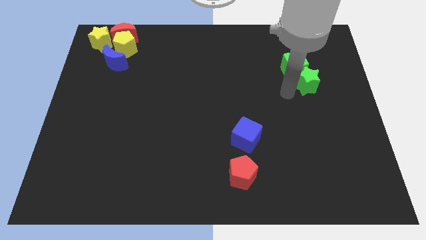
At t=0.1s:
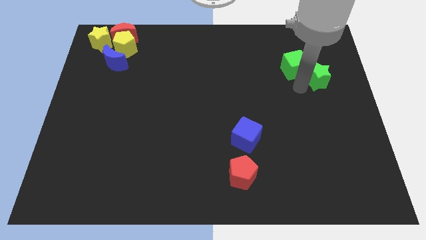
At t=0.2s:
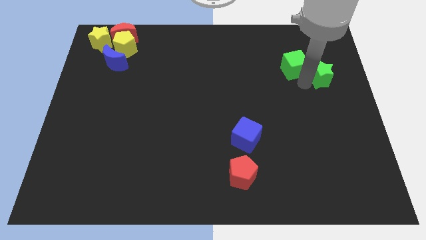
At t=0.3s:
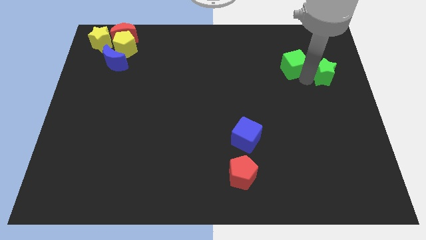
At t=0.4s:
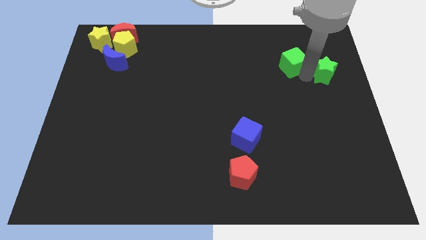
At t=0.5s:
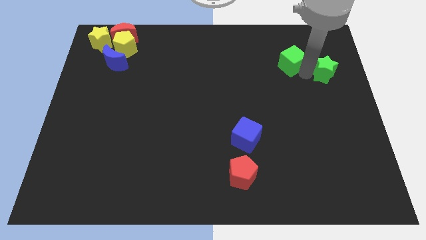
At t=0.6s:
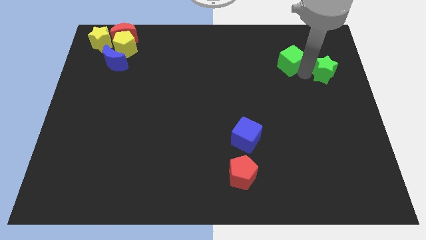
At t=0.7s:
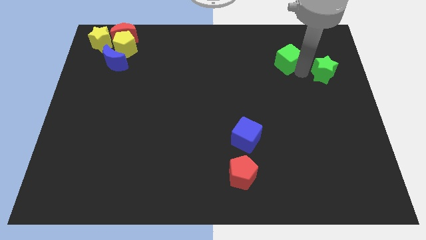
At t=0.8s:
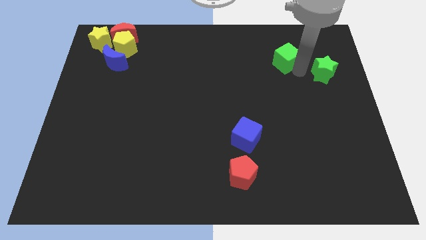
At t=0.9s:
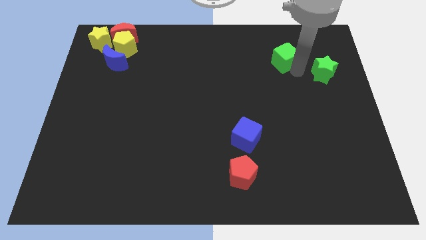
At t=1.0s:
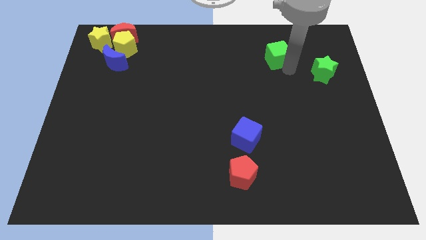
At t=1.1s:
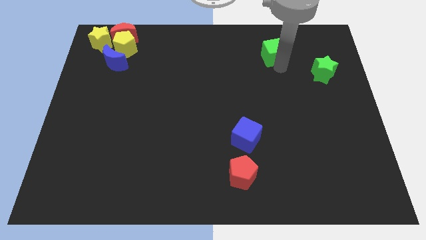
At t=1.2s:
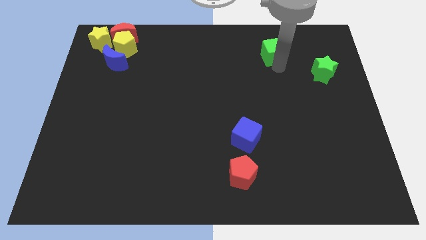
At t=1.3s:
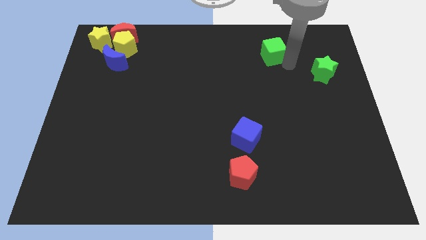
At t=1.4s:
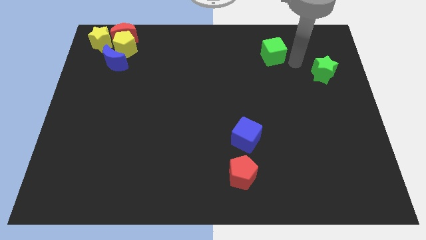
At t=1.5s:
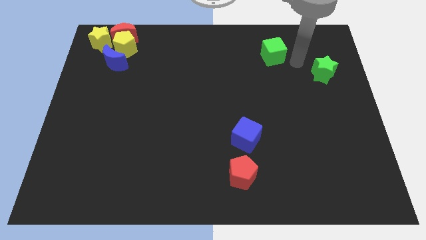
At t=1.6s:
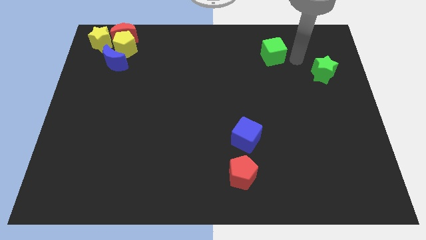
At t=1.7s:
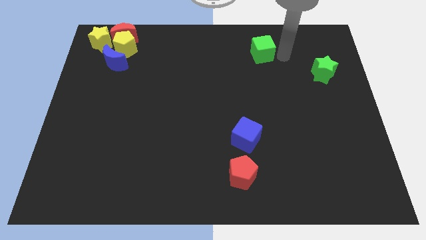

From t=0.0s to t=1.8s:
separate green cube away from green star

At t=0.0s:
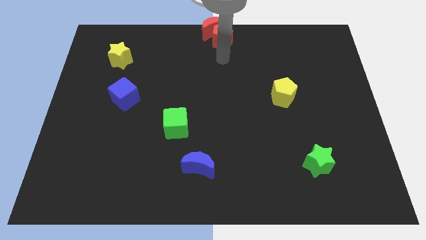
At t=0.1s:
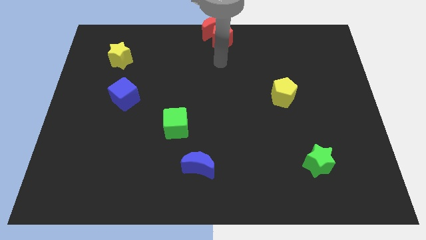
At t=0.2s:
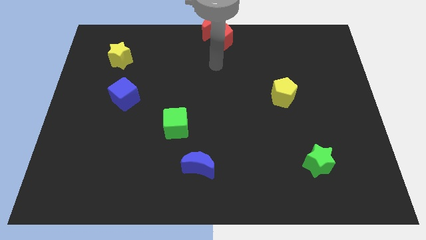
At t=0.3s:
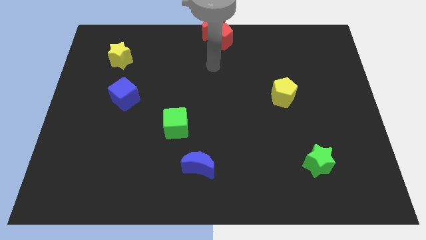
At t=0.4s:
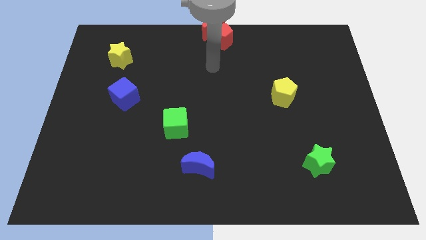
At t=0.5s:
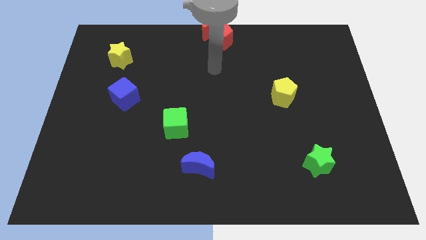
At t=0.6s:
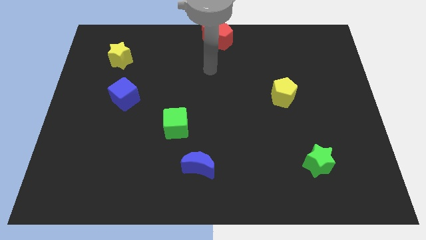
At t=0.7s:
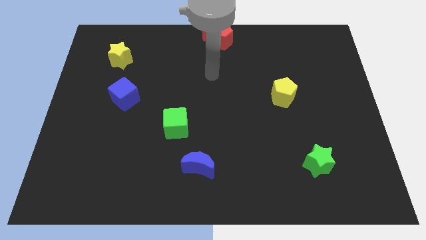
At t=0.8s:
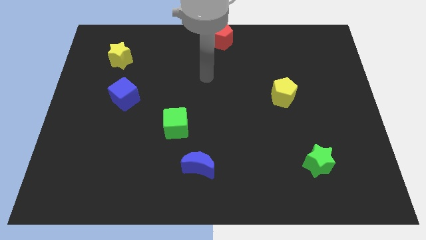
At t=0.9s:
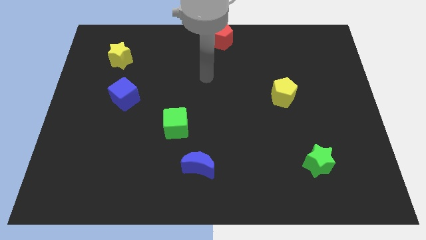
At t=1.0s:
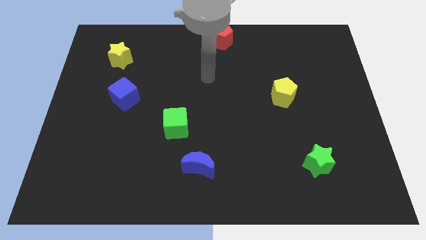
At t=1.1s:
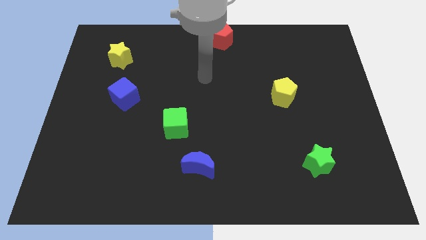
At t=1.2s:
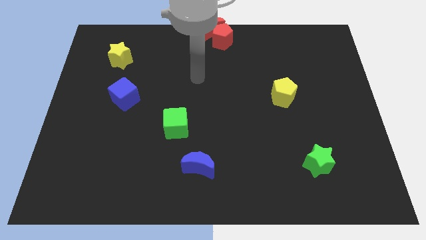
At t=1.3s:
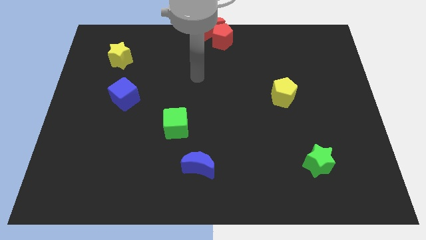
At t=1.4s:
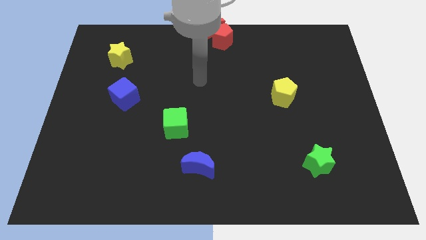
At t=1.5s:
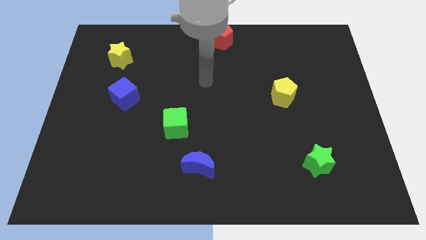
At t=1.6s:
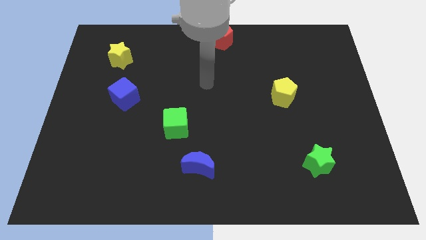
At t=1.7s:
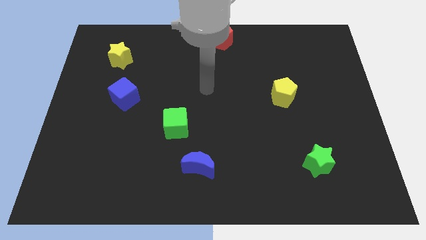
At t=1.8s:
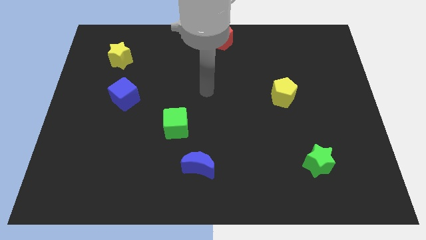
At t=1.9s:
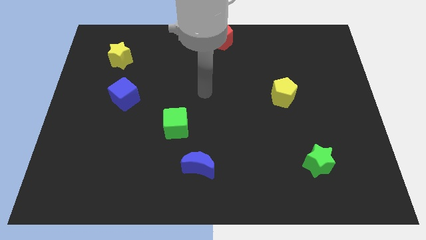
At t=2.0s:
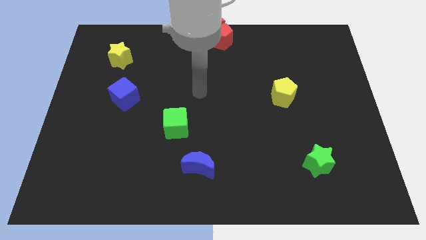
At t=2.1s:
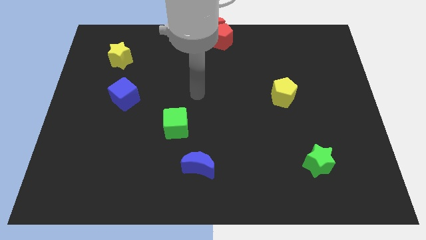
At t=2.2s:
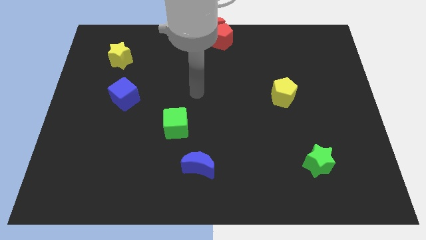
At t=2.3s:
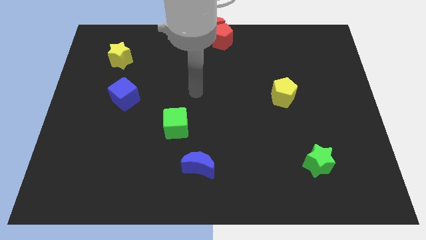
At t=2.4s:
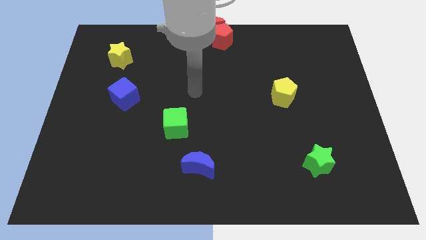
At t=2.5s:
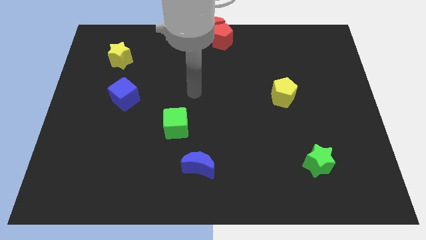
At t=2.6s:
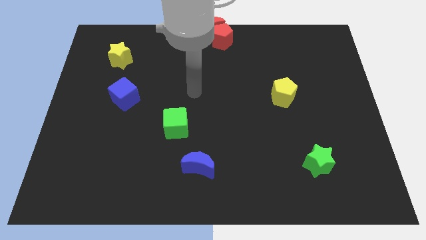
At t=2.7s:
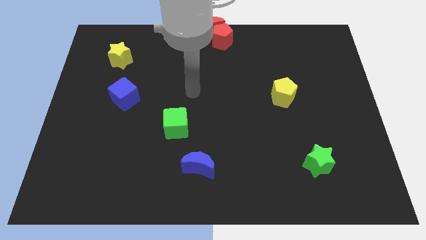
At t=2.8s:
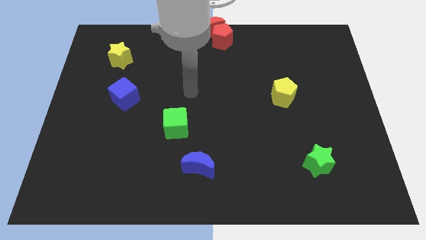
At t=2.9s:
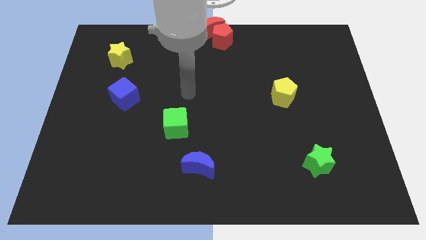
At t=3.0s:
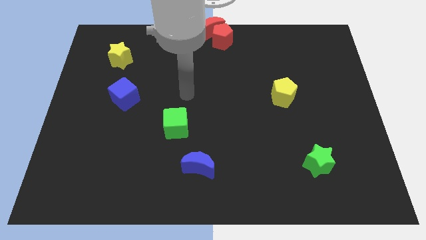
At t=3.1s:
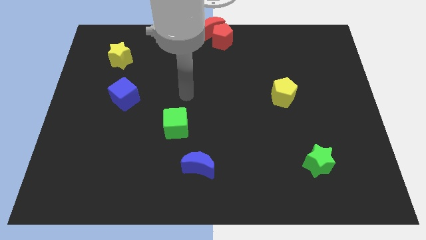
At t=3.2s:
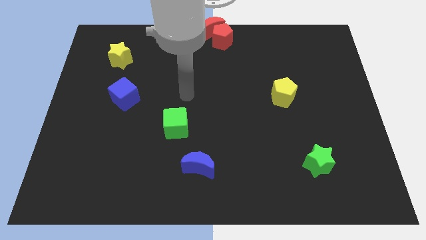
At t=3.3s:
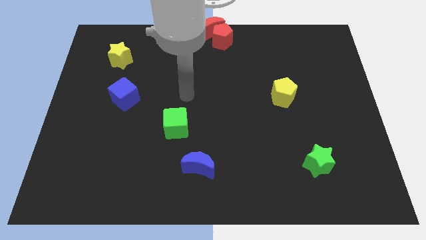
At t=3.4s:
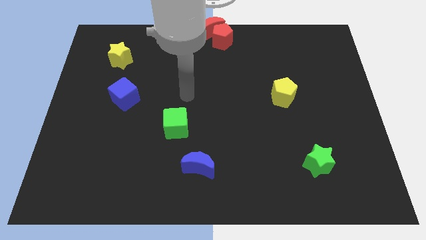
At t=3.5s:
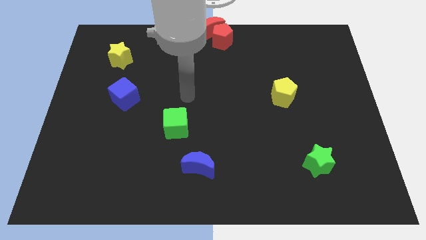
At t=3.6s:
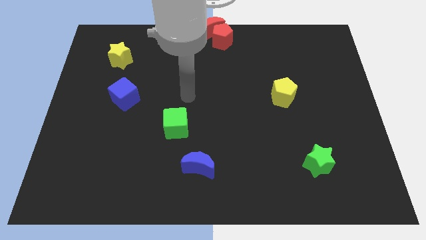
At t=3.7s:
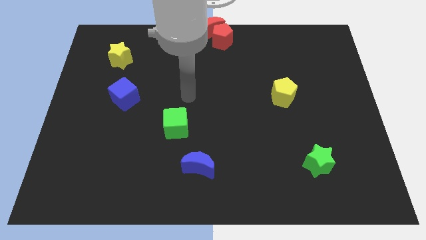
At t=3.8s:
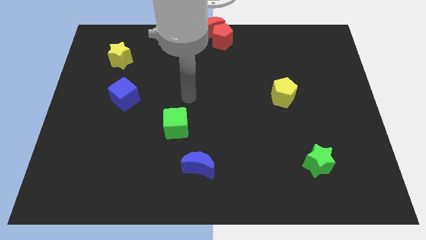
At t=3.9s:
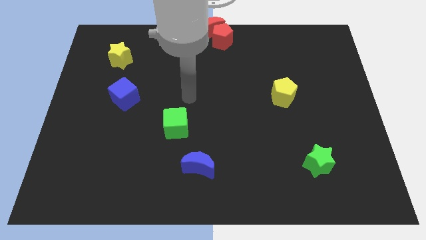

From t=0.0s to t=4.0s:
go away from the red pentagon

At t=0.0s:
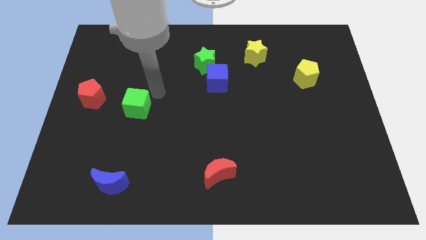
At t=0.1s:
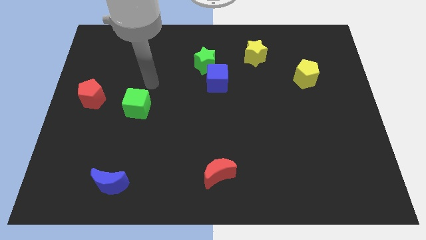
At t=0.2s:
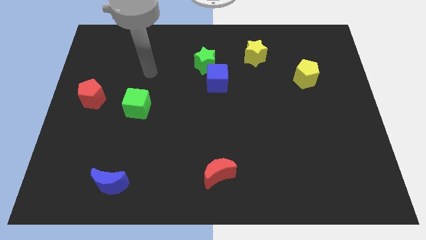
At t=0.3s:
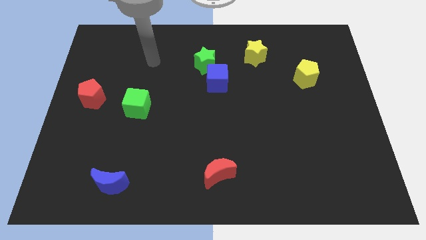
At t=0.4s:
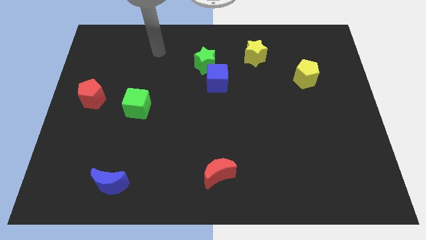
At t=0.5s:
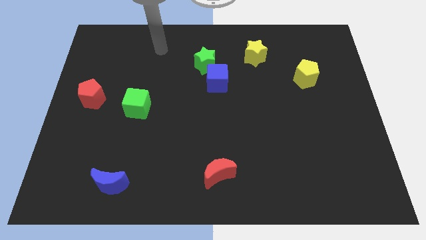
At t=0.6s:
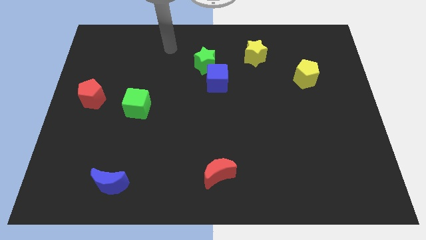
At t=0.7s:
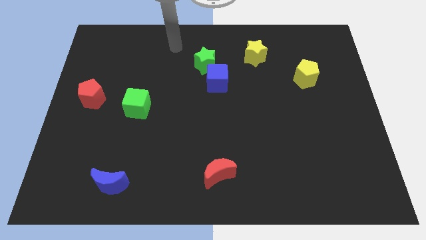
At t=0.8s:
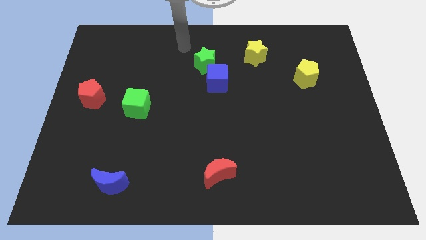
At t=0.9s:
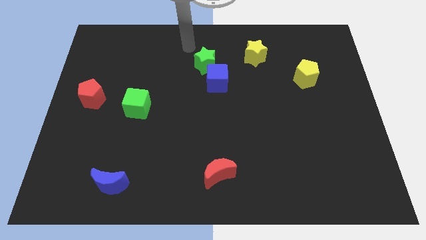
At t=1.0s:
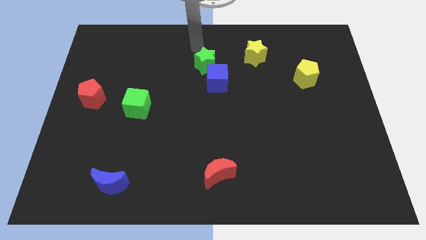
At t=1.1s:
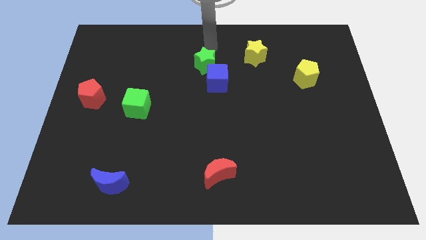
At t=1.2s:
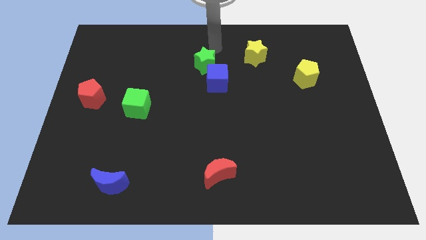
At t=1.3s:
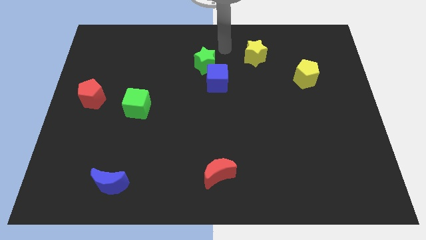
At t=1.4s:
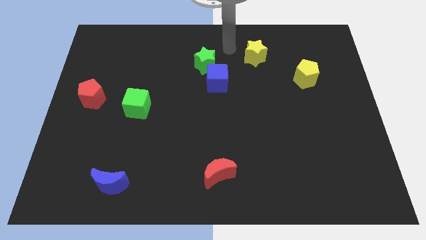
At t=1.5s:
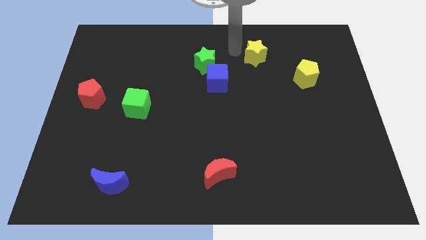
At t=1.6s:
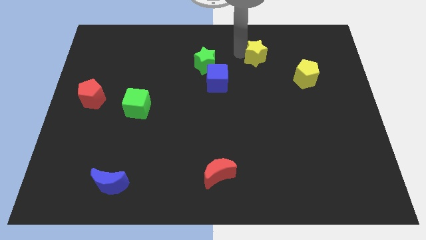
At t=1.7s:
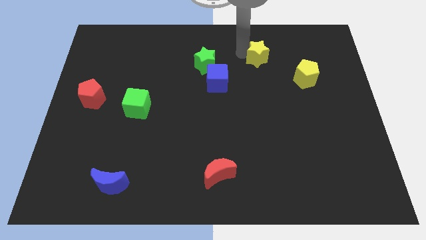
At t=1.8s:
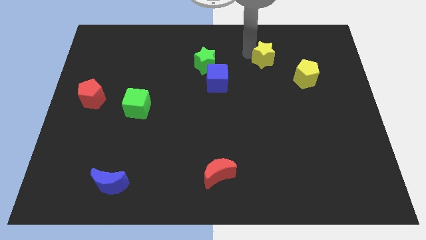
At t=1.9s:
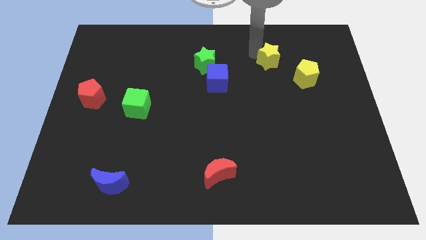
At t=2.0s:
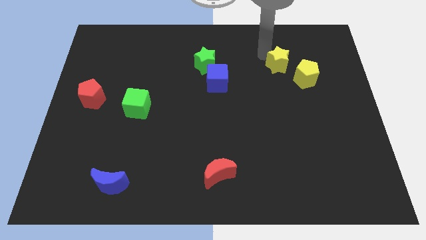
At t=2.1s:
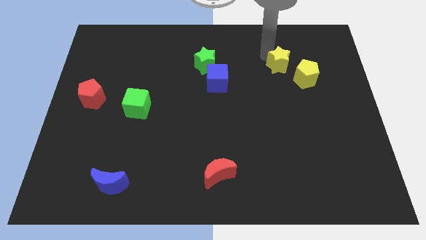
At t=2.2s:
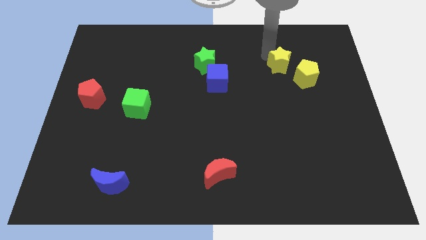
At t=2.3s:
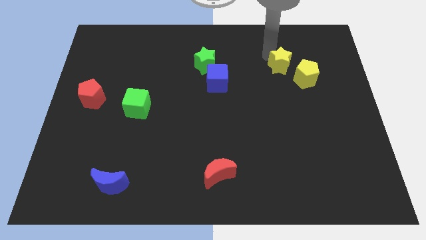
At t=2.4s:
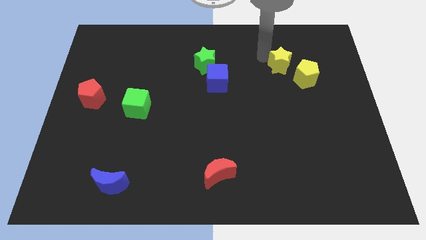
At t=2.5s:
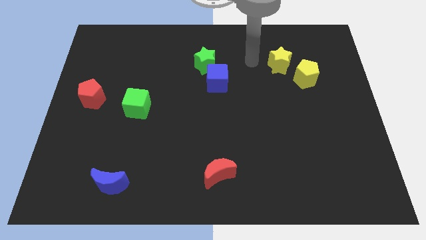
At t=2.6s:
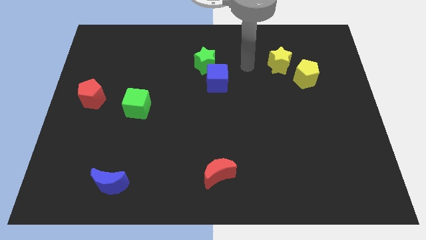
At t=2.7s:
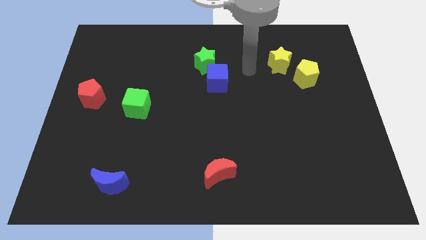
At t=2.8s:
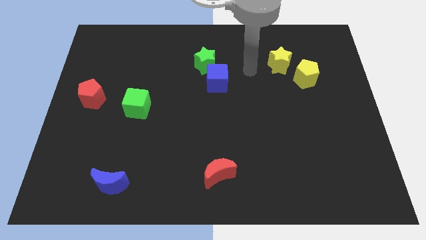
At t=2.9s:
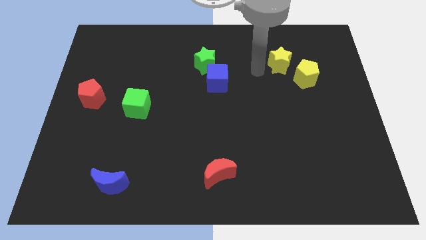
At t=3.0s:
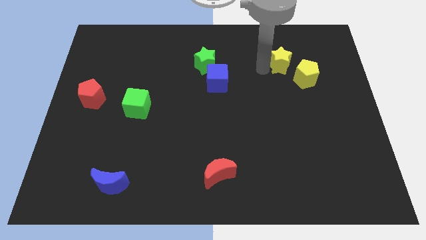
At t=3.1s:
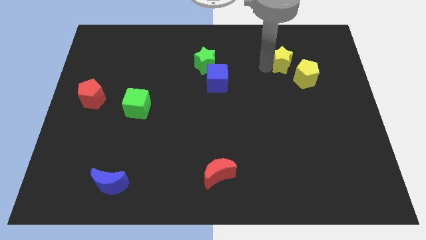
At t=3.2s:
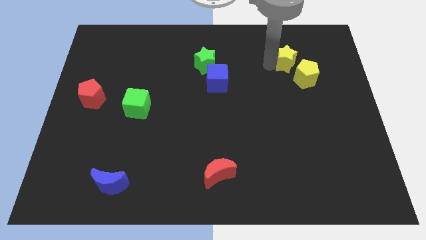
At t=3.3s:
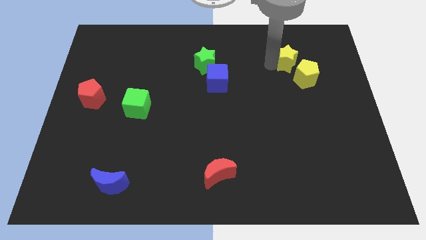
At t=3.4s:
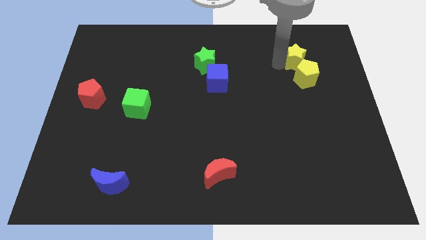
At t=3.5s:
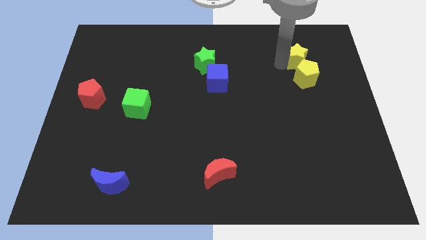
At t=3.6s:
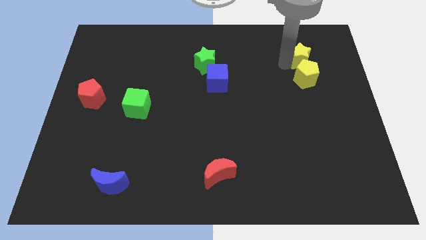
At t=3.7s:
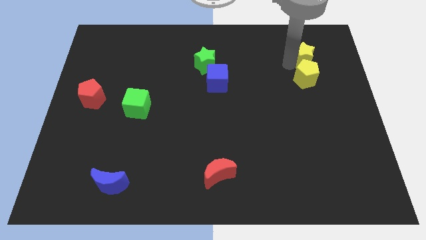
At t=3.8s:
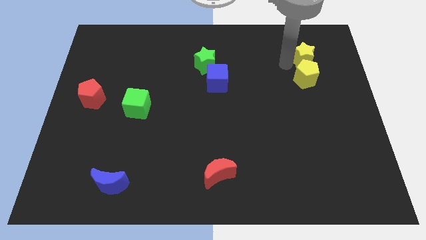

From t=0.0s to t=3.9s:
place the yellow star above the yellow pentagon
